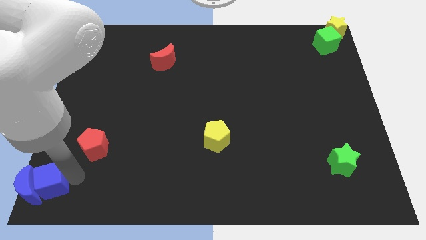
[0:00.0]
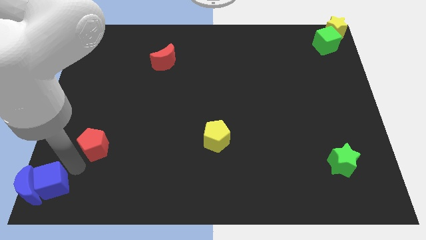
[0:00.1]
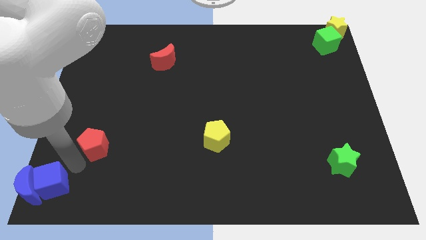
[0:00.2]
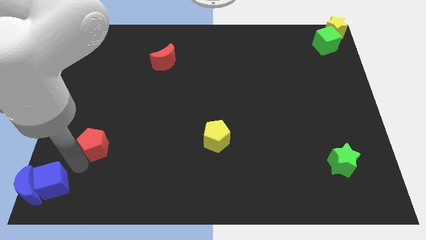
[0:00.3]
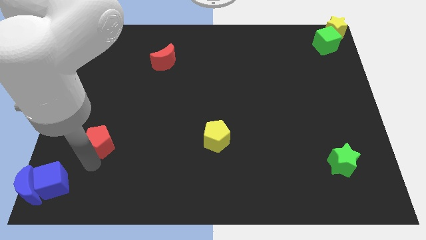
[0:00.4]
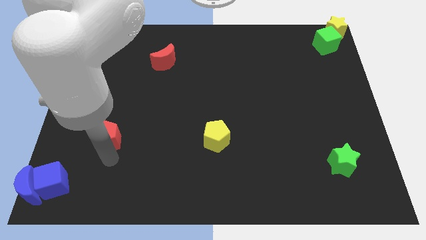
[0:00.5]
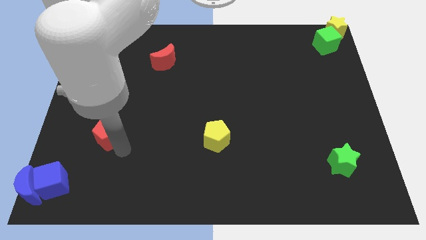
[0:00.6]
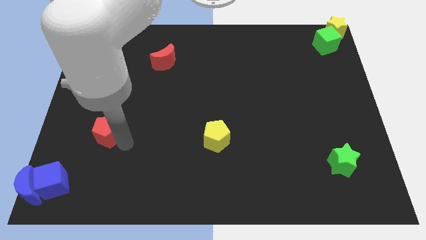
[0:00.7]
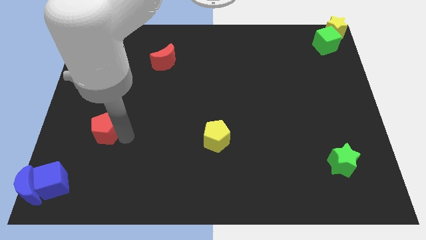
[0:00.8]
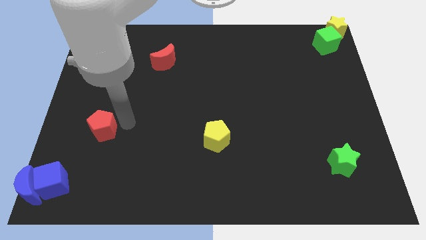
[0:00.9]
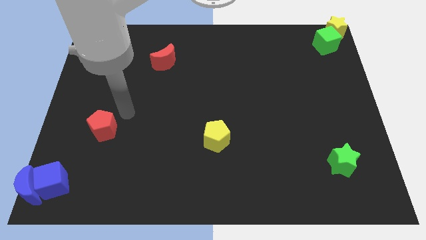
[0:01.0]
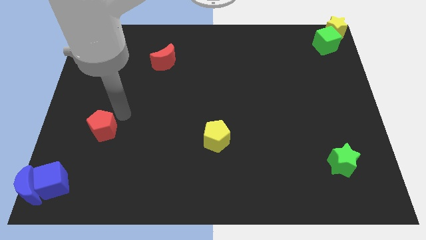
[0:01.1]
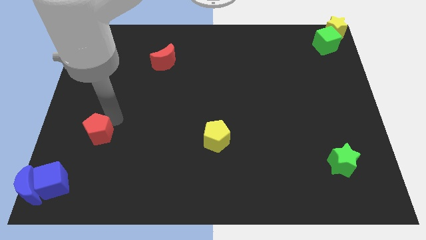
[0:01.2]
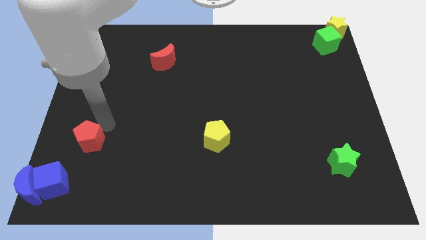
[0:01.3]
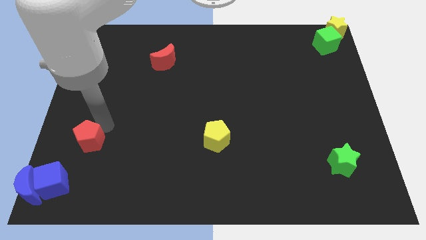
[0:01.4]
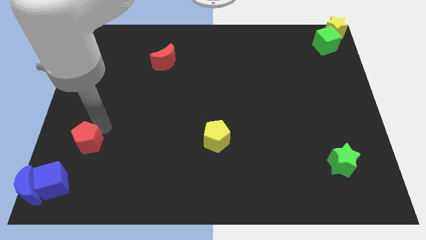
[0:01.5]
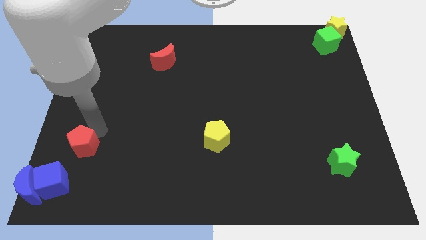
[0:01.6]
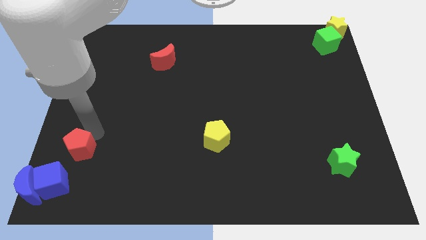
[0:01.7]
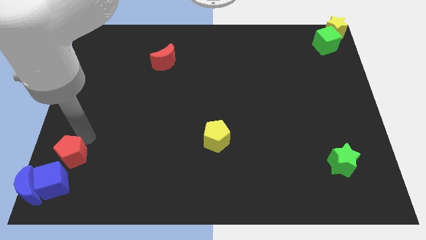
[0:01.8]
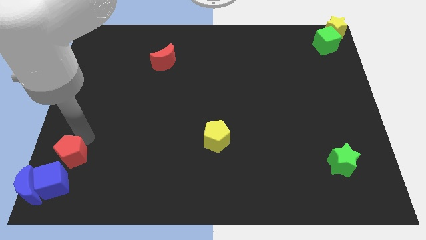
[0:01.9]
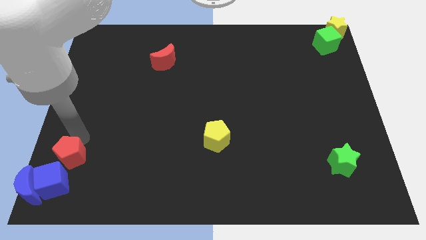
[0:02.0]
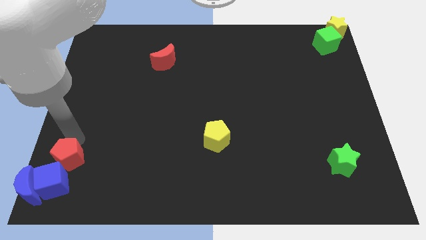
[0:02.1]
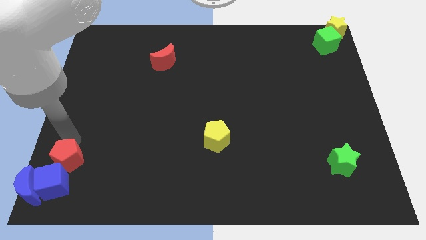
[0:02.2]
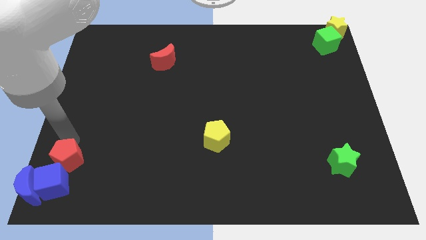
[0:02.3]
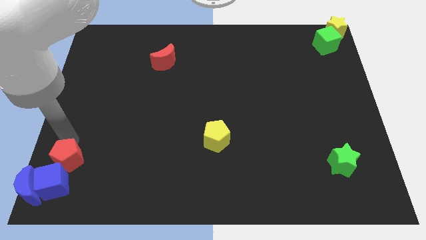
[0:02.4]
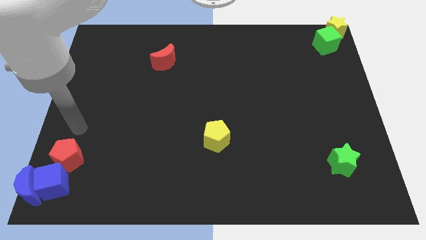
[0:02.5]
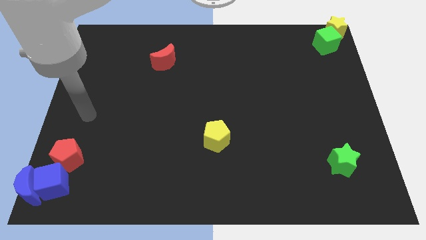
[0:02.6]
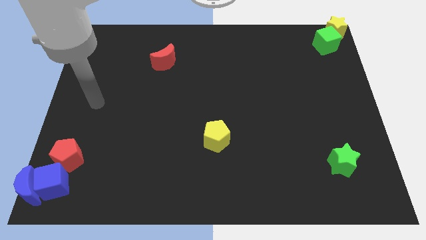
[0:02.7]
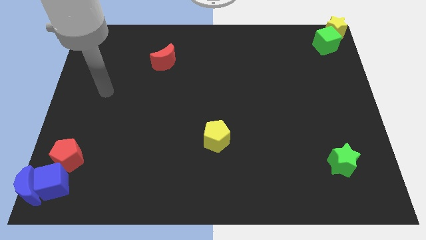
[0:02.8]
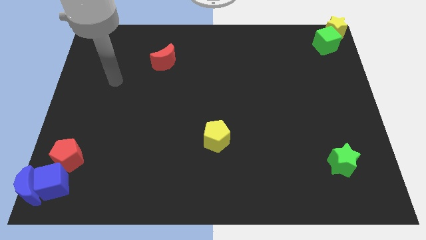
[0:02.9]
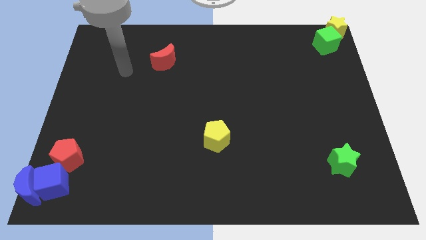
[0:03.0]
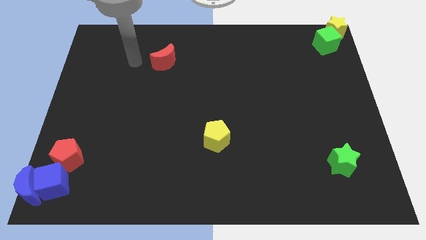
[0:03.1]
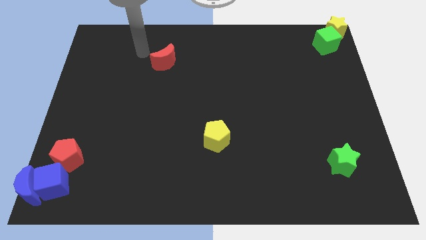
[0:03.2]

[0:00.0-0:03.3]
move the red pentagon to the top of the blue cube

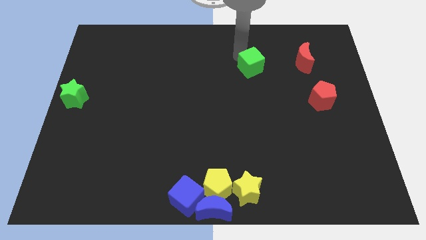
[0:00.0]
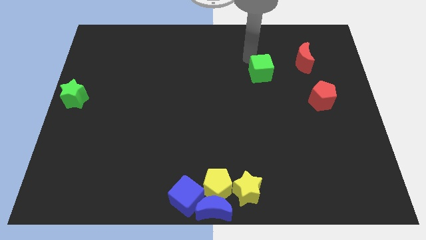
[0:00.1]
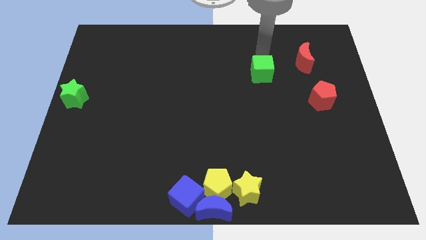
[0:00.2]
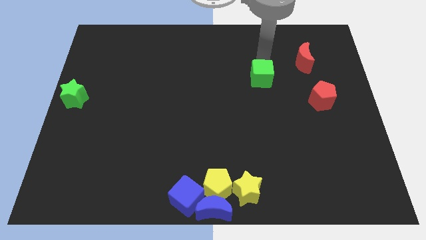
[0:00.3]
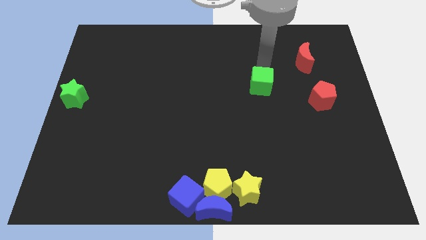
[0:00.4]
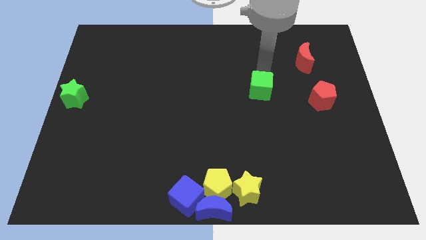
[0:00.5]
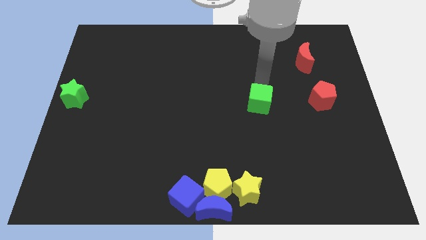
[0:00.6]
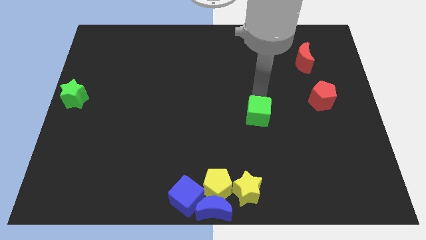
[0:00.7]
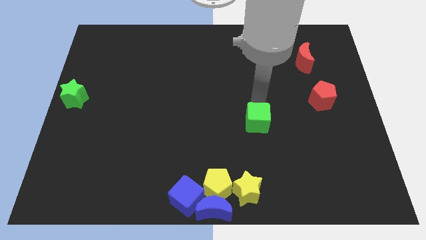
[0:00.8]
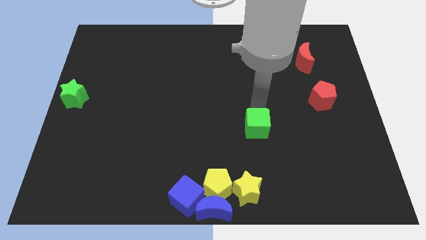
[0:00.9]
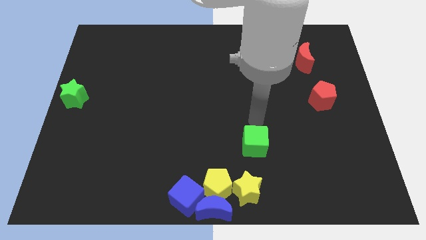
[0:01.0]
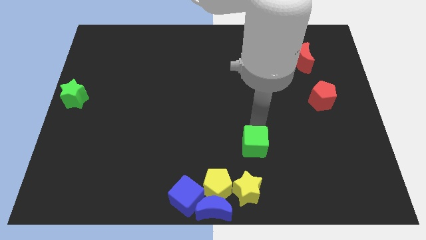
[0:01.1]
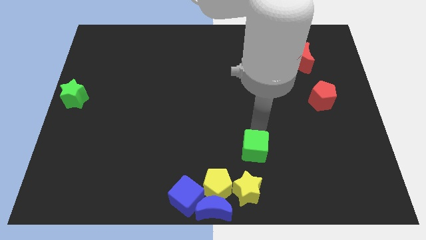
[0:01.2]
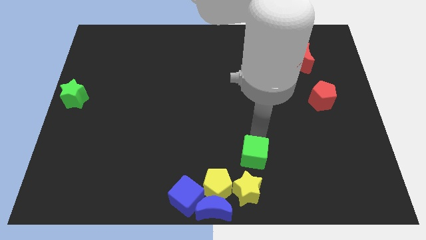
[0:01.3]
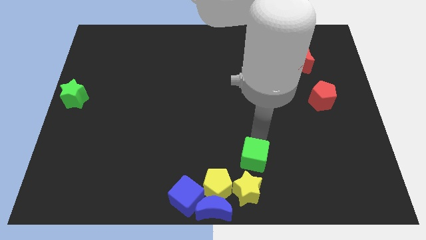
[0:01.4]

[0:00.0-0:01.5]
place the green cube above the yellow star

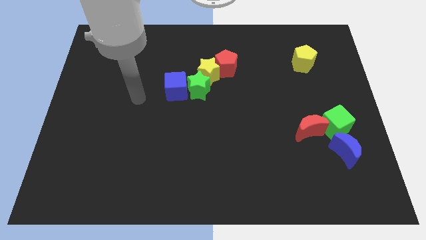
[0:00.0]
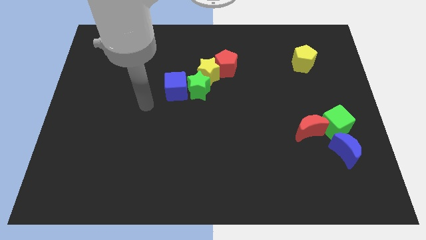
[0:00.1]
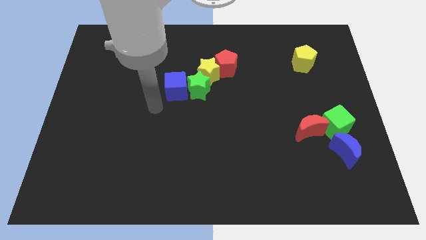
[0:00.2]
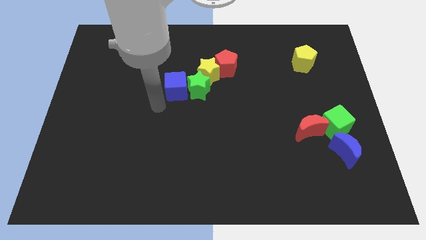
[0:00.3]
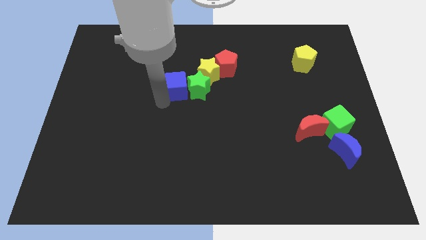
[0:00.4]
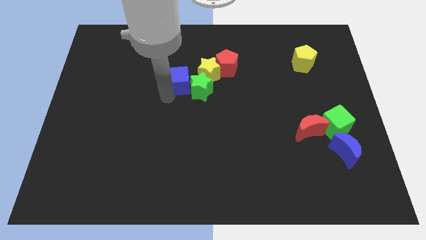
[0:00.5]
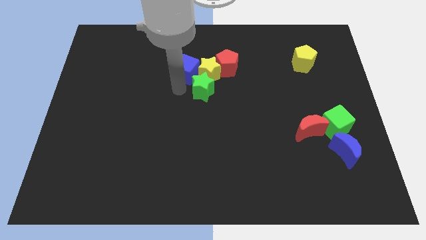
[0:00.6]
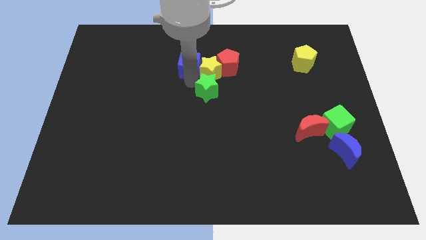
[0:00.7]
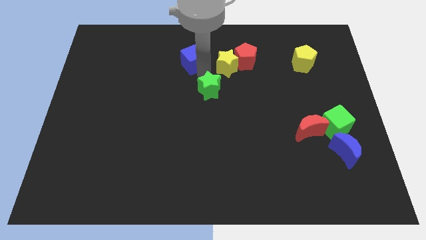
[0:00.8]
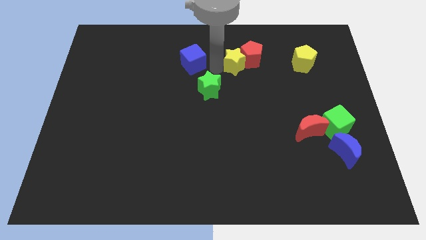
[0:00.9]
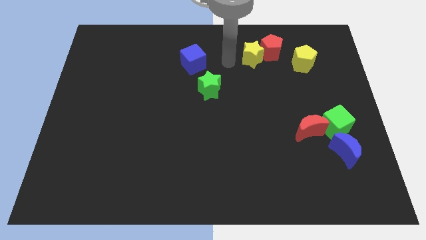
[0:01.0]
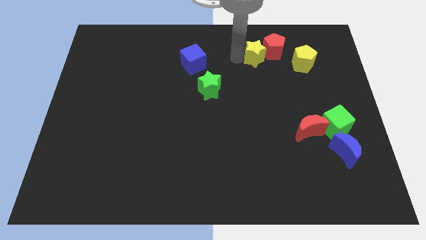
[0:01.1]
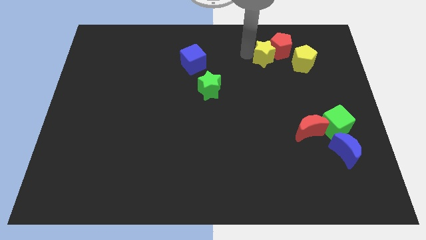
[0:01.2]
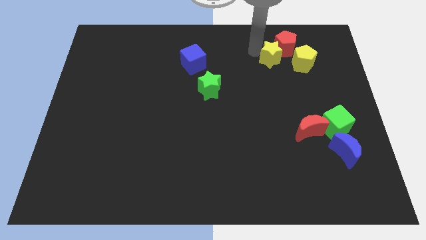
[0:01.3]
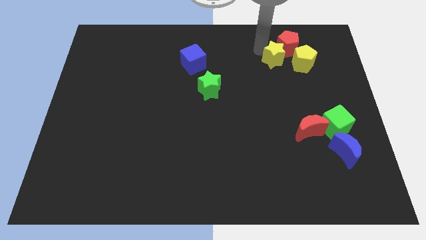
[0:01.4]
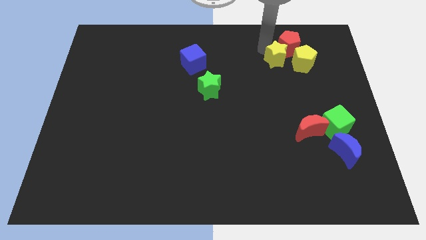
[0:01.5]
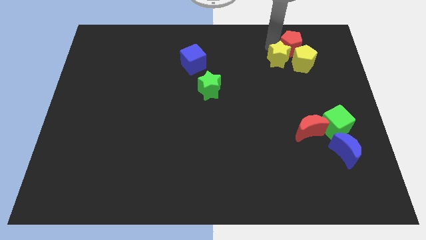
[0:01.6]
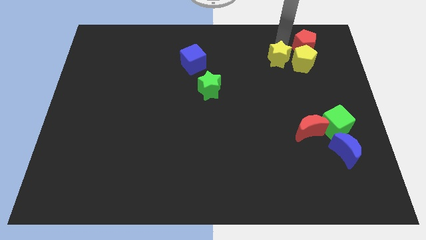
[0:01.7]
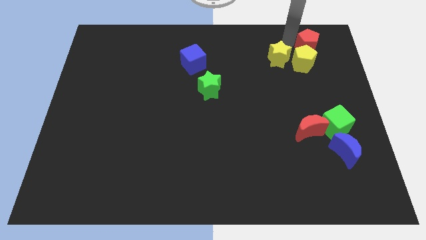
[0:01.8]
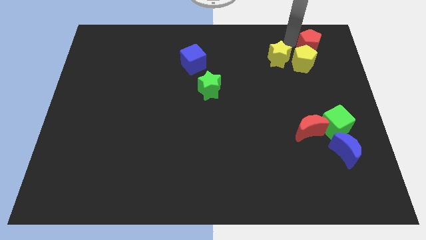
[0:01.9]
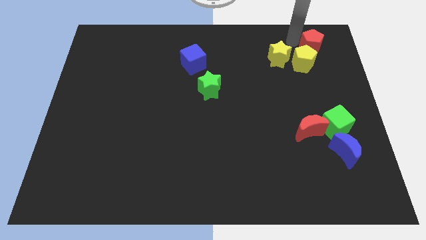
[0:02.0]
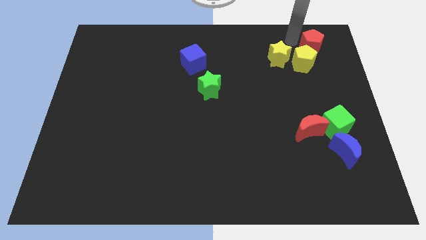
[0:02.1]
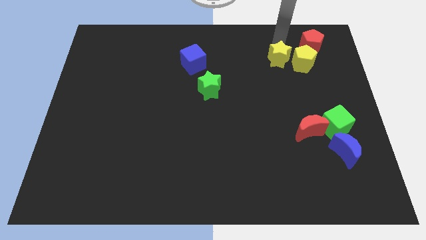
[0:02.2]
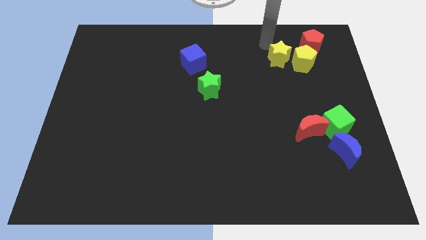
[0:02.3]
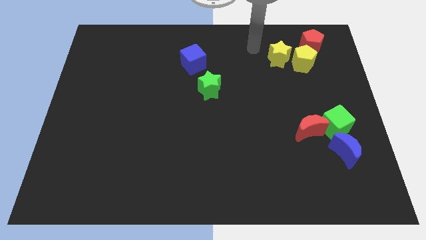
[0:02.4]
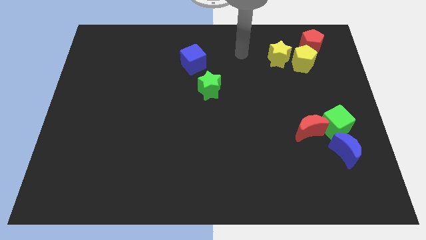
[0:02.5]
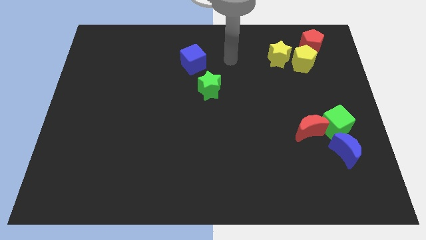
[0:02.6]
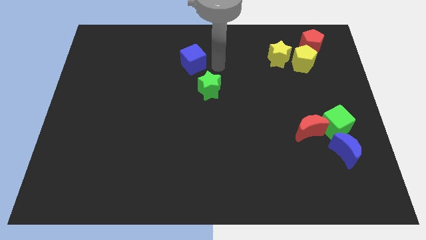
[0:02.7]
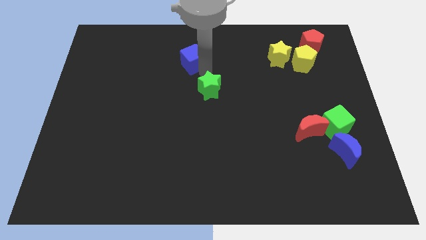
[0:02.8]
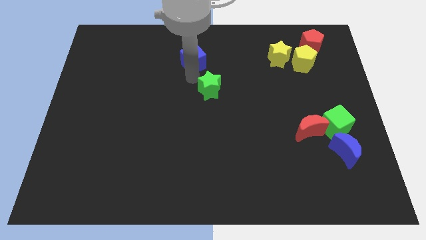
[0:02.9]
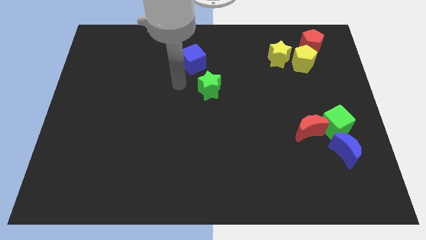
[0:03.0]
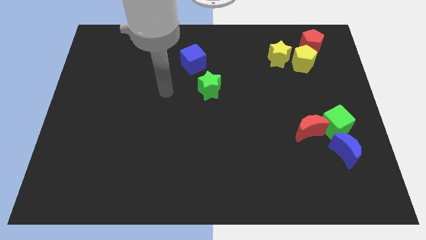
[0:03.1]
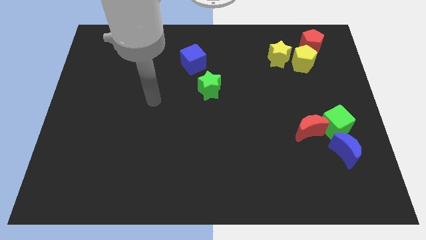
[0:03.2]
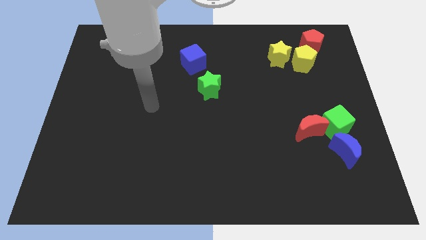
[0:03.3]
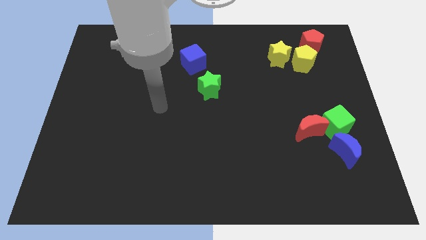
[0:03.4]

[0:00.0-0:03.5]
separate the red pentagon from red pentagon

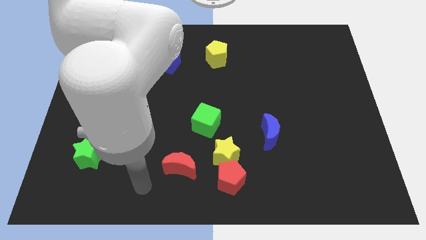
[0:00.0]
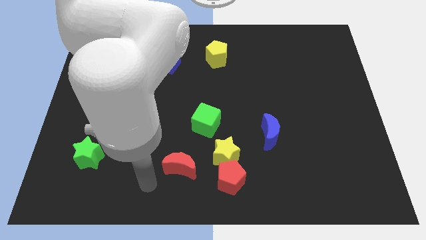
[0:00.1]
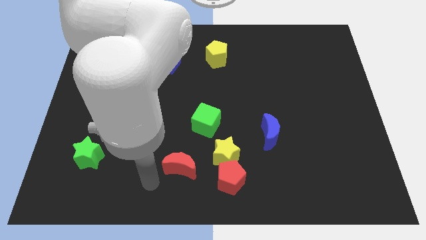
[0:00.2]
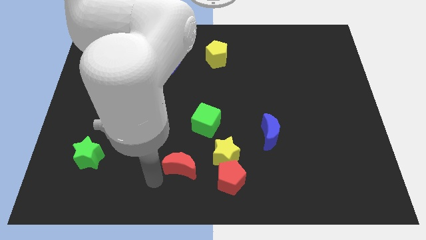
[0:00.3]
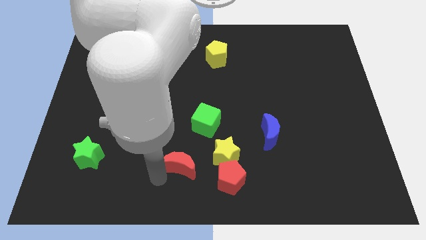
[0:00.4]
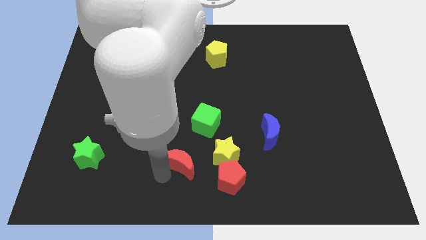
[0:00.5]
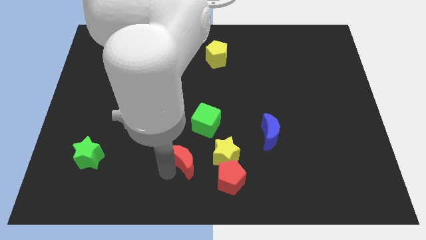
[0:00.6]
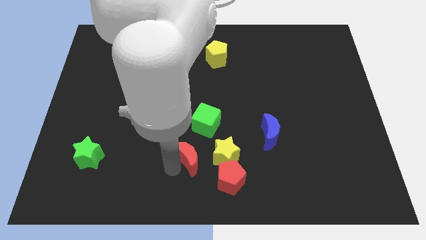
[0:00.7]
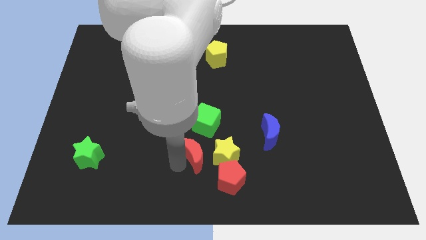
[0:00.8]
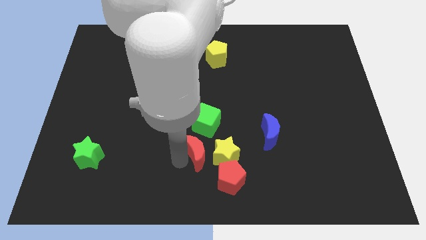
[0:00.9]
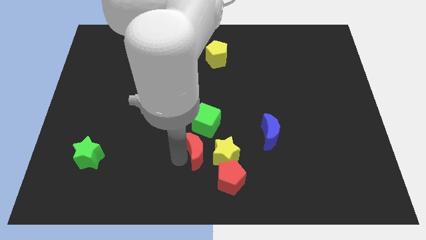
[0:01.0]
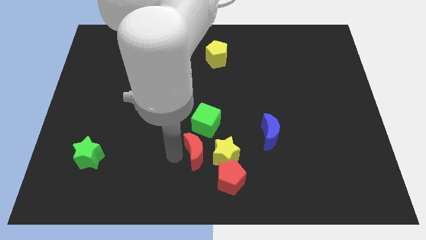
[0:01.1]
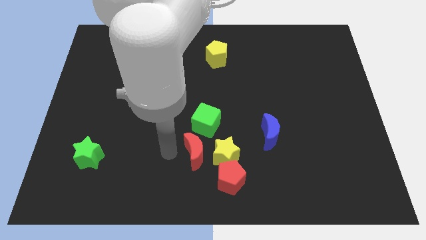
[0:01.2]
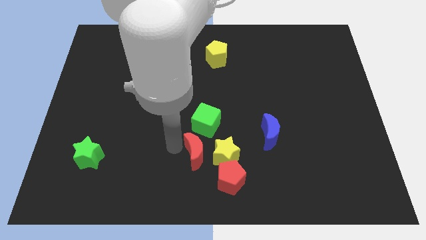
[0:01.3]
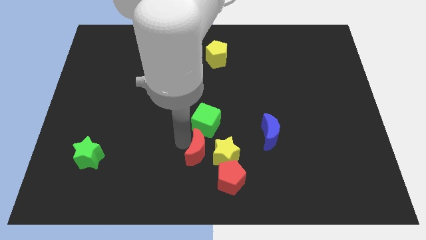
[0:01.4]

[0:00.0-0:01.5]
push the red crescent to the left of the yellow star
